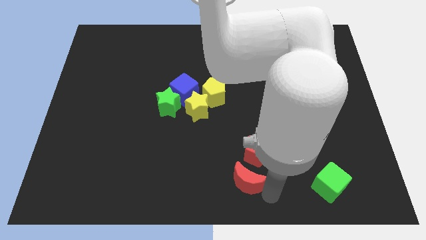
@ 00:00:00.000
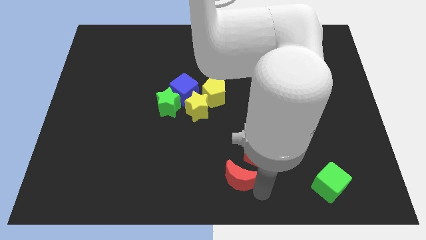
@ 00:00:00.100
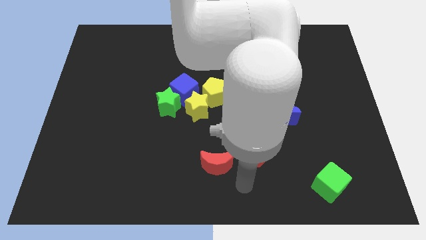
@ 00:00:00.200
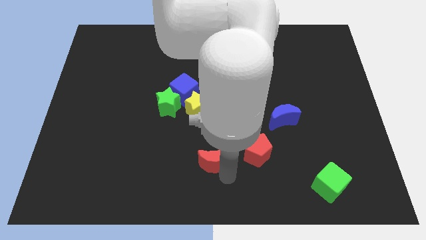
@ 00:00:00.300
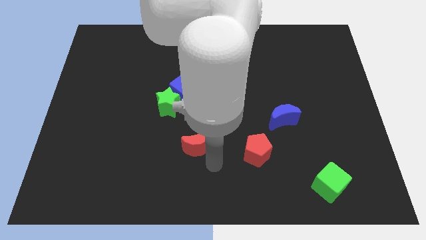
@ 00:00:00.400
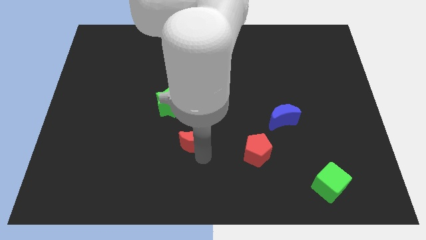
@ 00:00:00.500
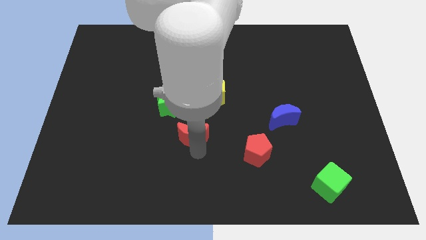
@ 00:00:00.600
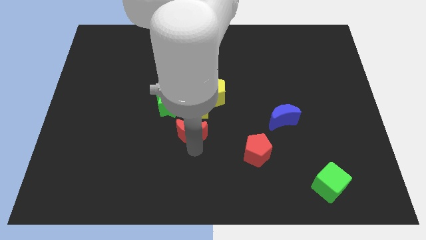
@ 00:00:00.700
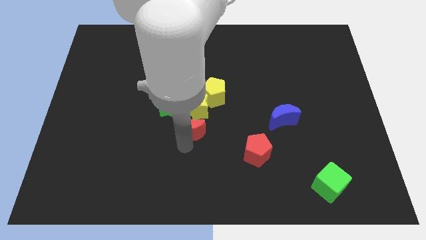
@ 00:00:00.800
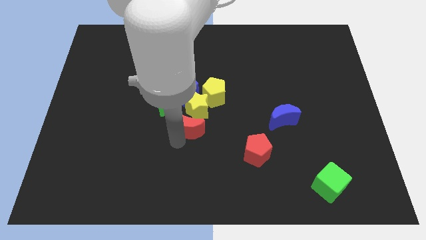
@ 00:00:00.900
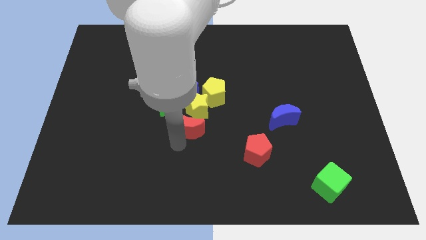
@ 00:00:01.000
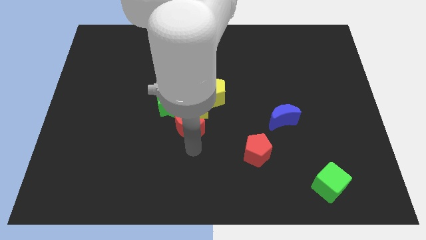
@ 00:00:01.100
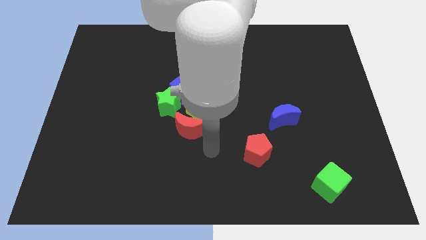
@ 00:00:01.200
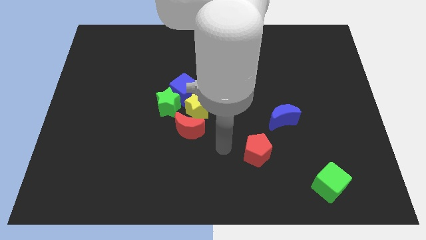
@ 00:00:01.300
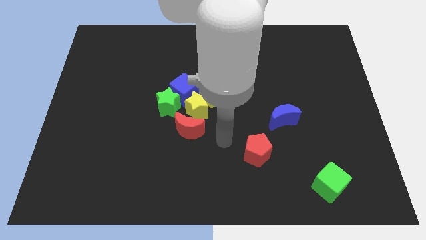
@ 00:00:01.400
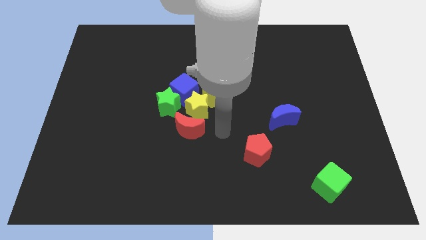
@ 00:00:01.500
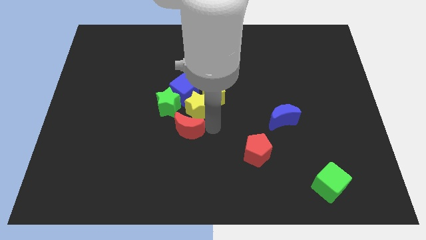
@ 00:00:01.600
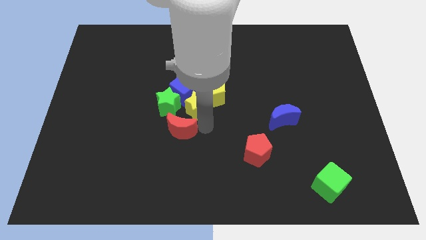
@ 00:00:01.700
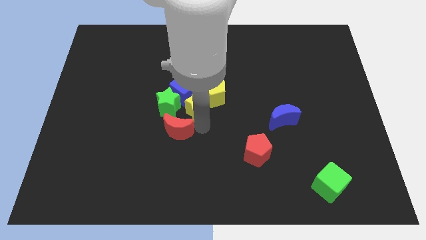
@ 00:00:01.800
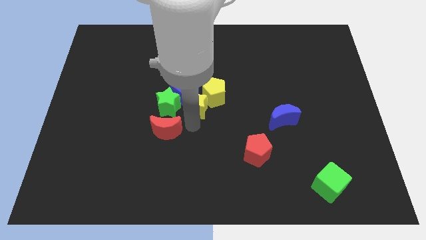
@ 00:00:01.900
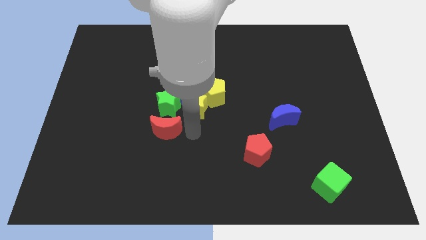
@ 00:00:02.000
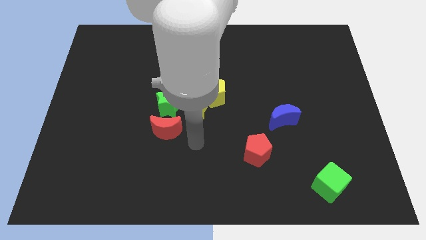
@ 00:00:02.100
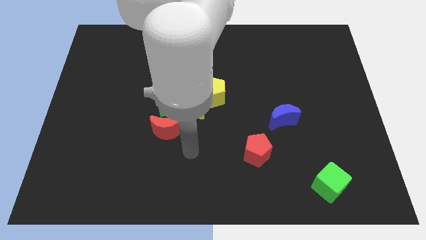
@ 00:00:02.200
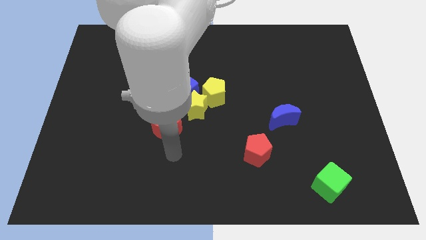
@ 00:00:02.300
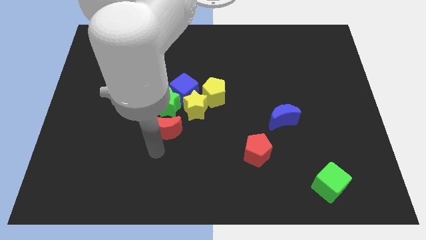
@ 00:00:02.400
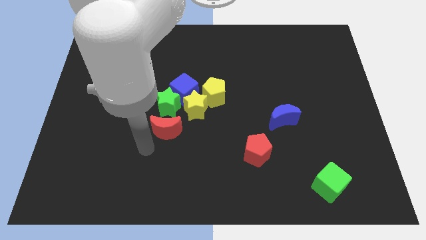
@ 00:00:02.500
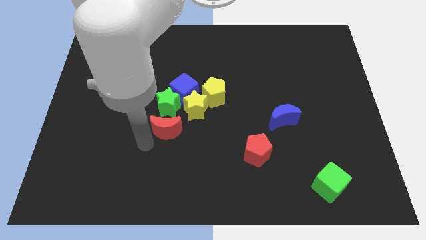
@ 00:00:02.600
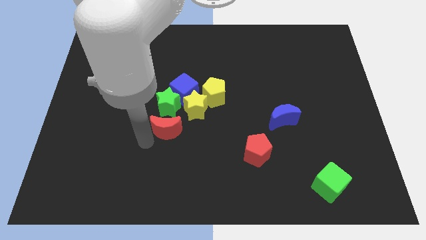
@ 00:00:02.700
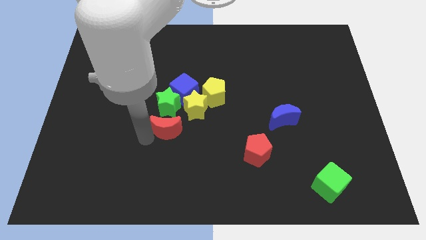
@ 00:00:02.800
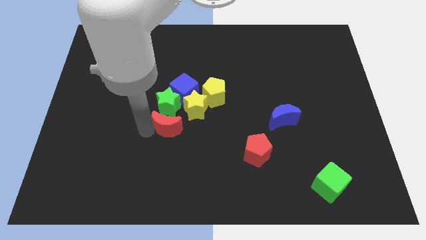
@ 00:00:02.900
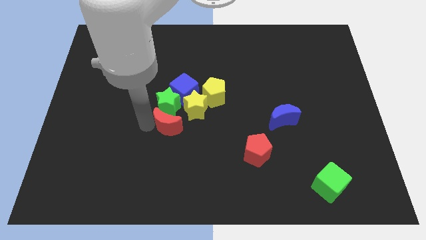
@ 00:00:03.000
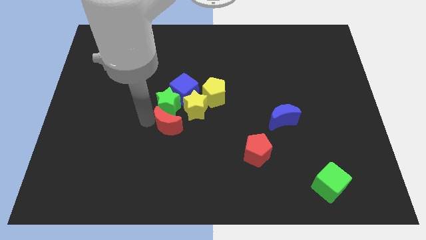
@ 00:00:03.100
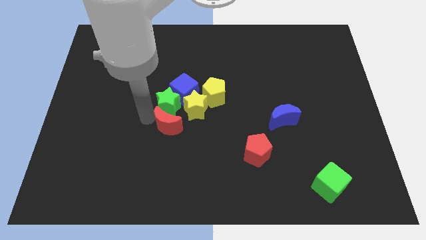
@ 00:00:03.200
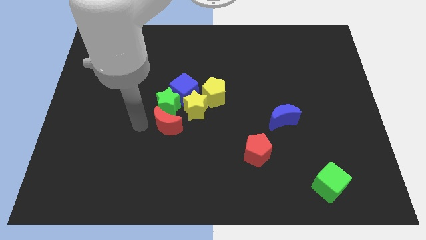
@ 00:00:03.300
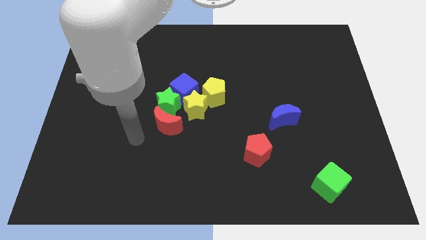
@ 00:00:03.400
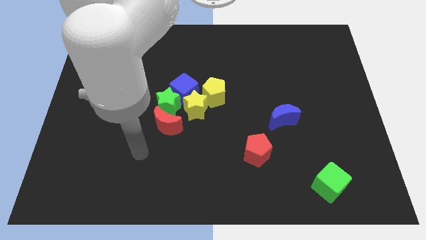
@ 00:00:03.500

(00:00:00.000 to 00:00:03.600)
move the red crescent to the bottom of the green star

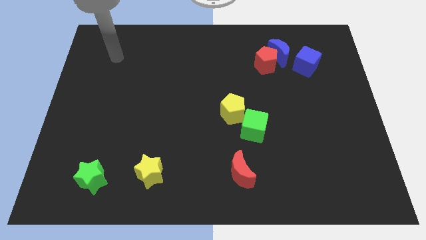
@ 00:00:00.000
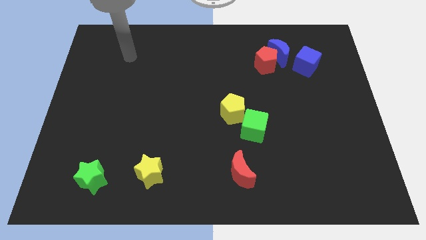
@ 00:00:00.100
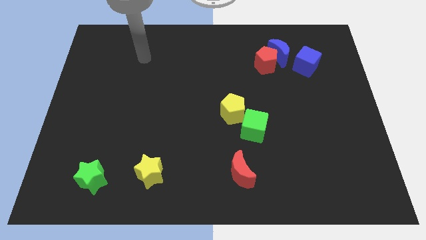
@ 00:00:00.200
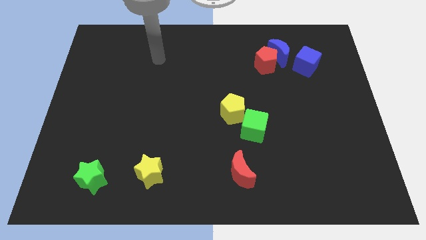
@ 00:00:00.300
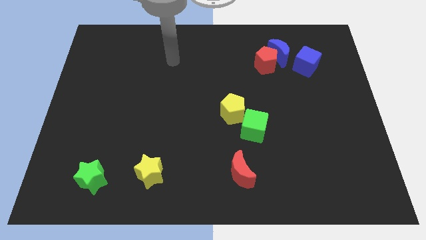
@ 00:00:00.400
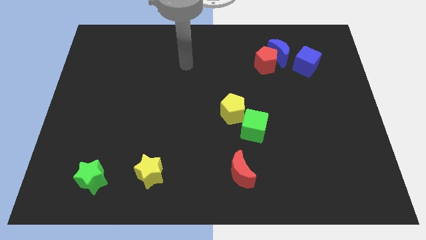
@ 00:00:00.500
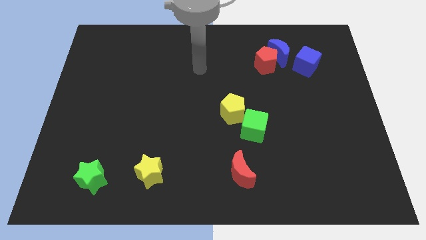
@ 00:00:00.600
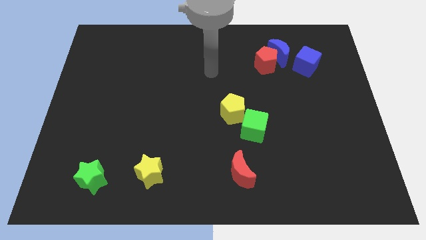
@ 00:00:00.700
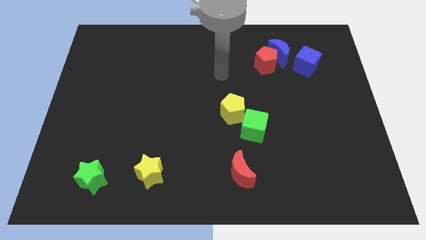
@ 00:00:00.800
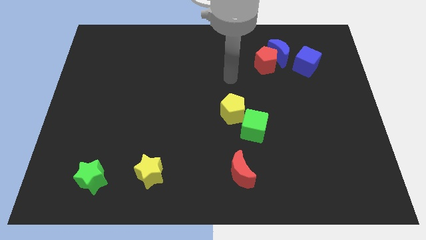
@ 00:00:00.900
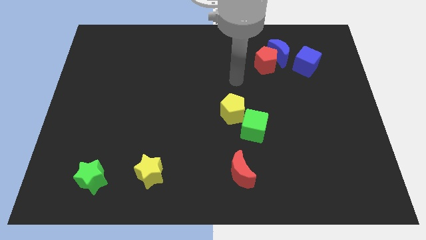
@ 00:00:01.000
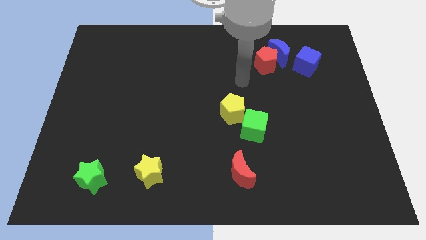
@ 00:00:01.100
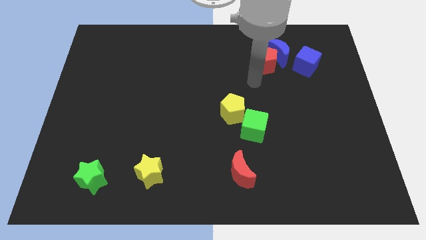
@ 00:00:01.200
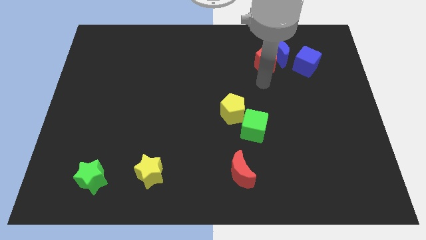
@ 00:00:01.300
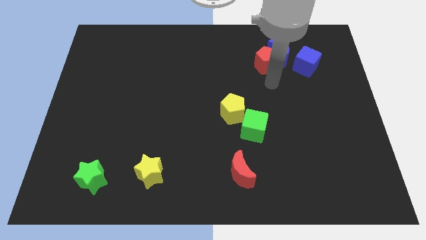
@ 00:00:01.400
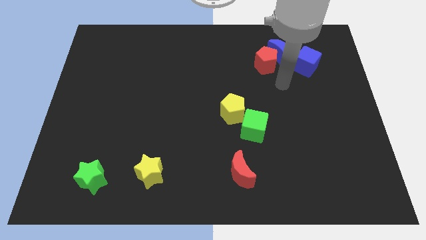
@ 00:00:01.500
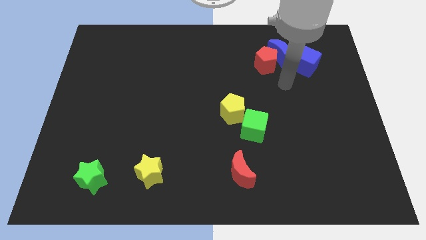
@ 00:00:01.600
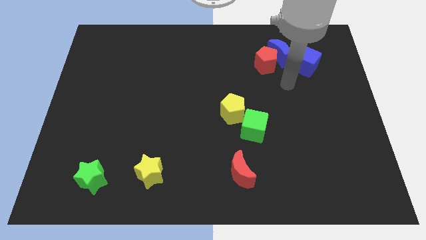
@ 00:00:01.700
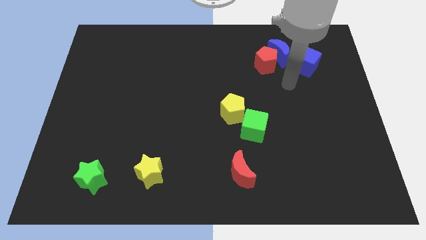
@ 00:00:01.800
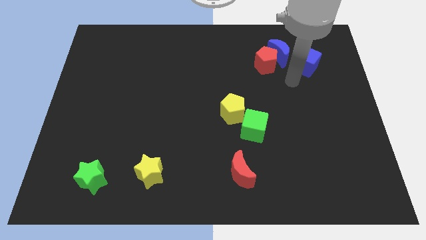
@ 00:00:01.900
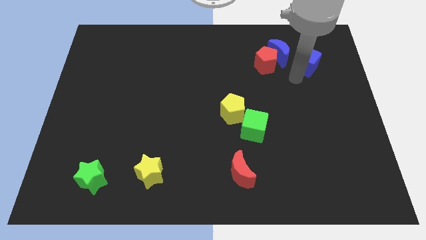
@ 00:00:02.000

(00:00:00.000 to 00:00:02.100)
move your arm close to the blue cube

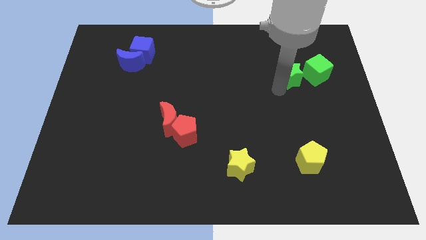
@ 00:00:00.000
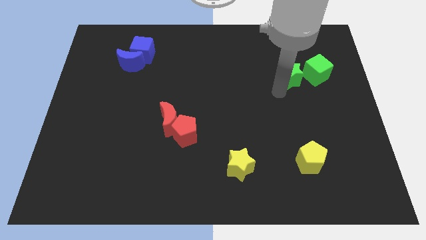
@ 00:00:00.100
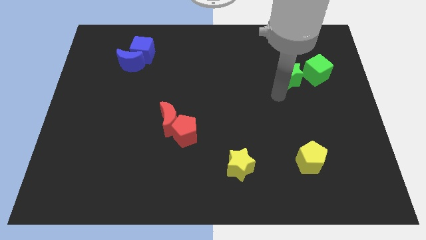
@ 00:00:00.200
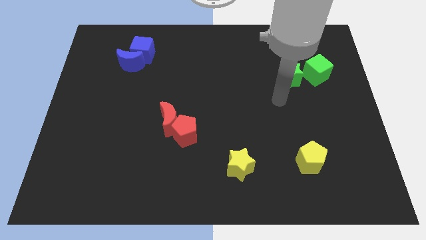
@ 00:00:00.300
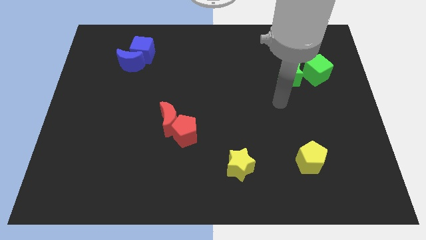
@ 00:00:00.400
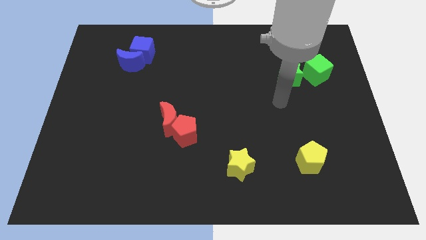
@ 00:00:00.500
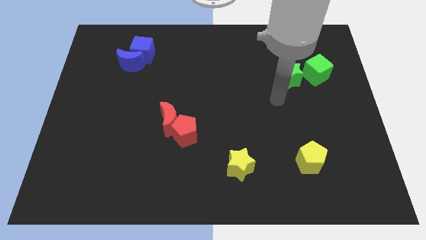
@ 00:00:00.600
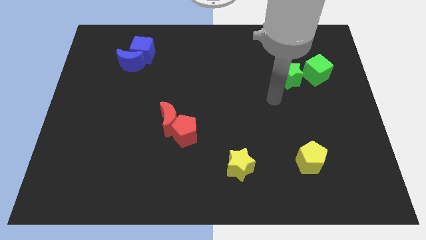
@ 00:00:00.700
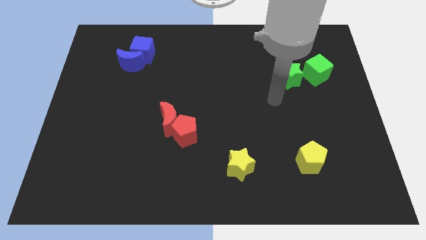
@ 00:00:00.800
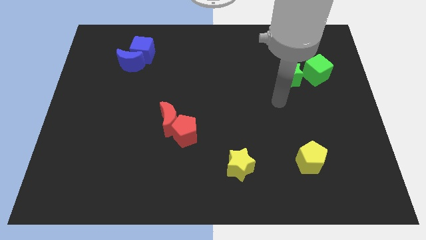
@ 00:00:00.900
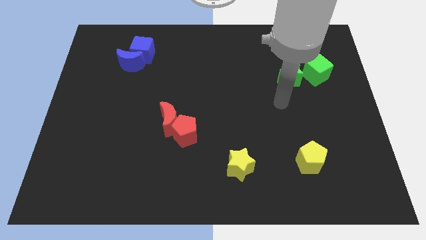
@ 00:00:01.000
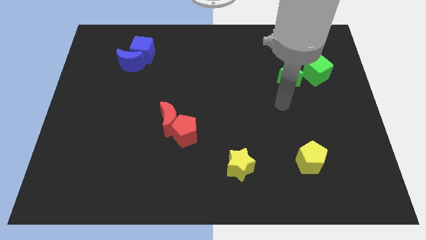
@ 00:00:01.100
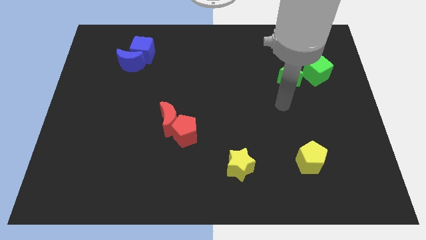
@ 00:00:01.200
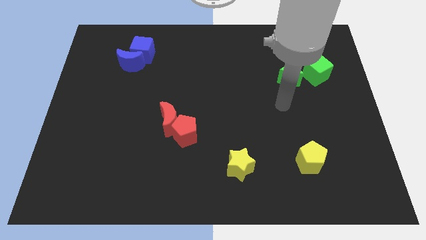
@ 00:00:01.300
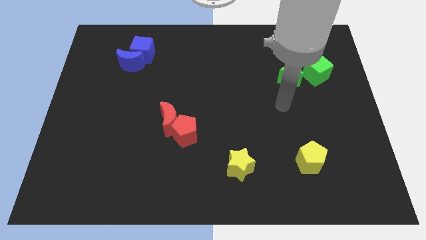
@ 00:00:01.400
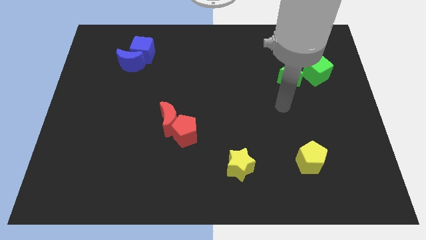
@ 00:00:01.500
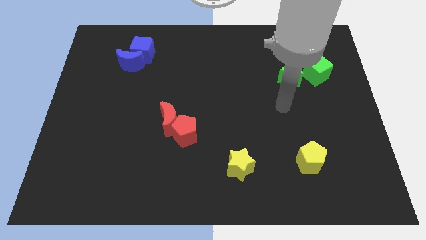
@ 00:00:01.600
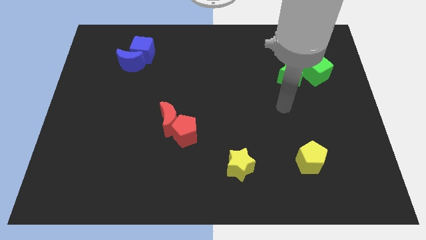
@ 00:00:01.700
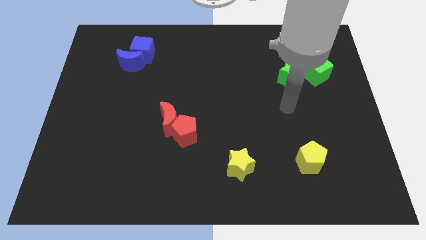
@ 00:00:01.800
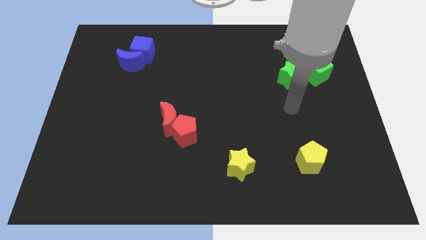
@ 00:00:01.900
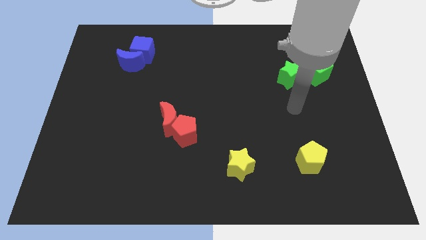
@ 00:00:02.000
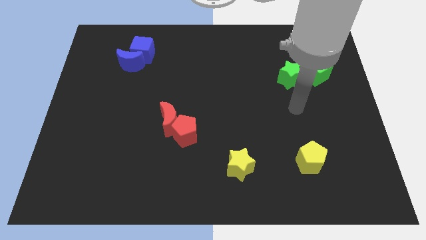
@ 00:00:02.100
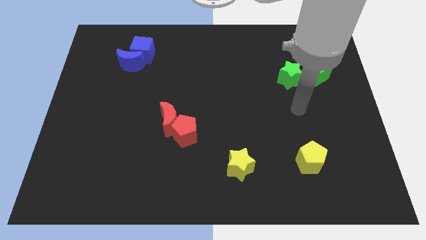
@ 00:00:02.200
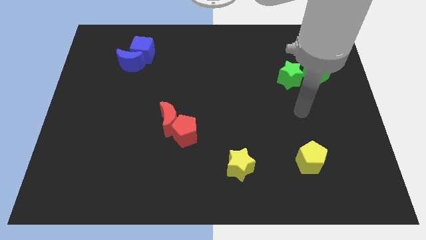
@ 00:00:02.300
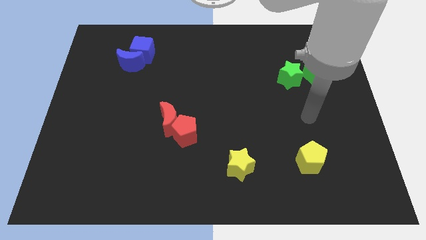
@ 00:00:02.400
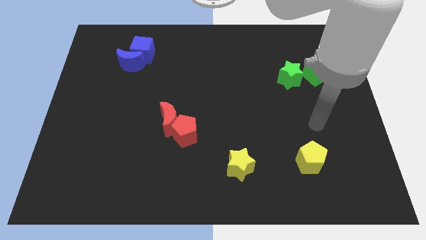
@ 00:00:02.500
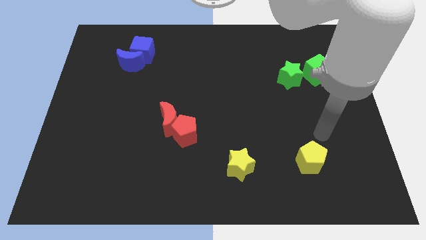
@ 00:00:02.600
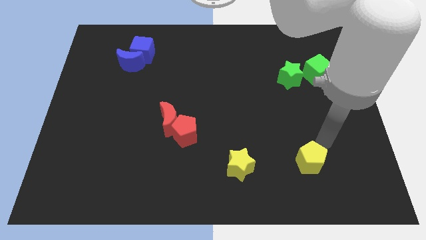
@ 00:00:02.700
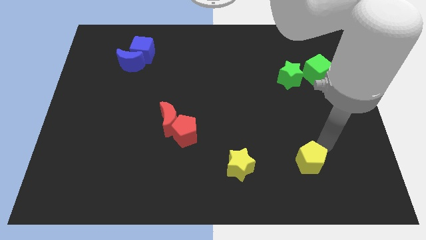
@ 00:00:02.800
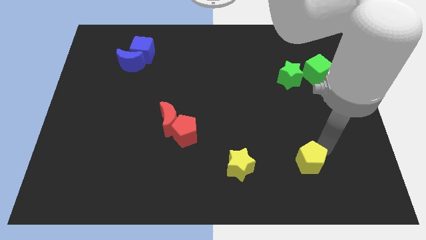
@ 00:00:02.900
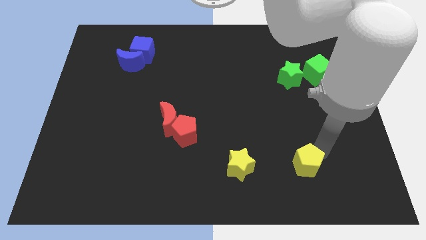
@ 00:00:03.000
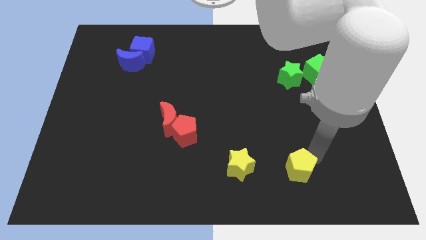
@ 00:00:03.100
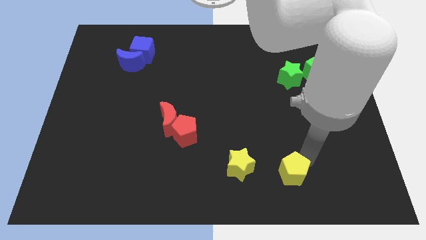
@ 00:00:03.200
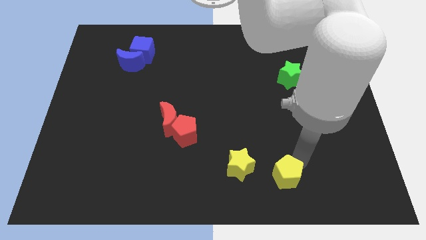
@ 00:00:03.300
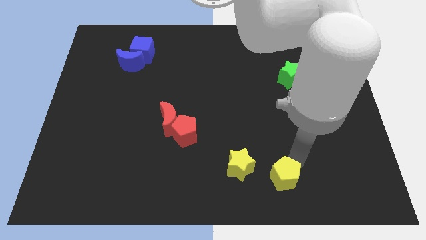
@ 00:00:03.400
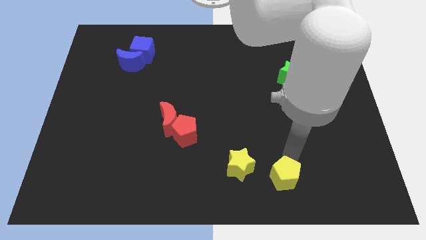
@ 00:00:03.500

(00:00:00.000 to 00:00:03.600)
move the yellow pentagon bottom right to the yellow star
